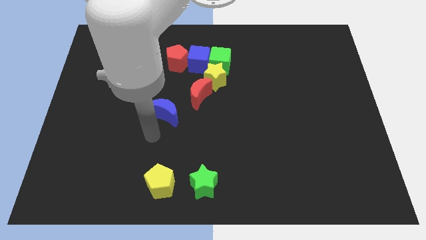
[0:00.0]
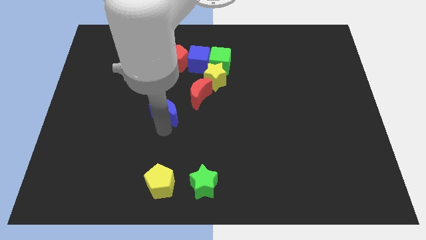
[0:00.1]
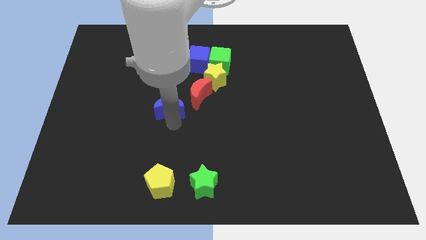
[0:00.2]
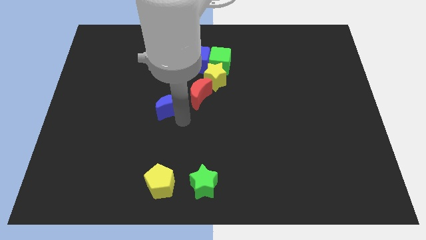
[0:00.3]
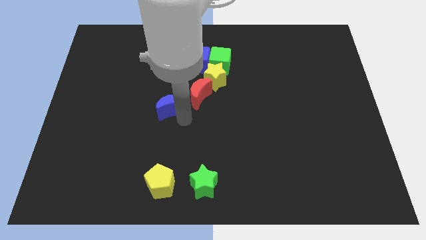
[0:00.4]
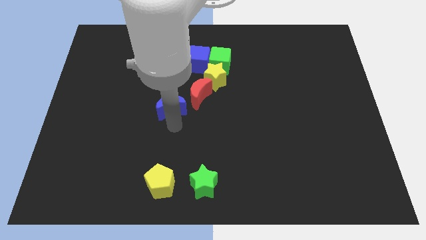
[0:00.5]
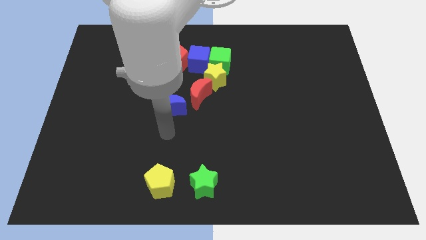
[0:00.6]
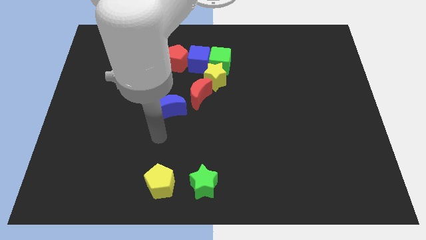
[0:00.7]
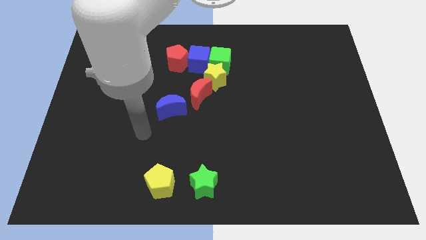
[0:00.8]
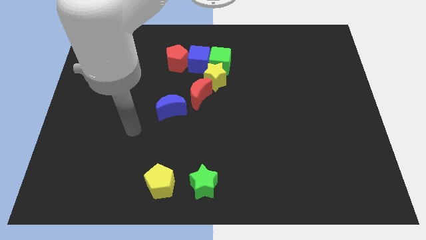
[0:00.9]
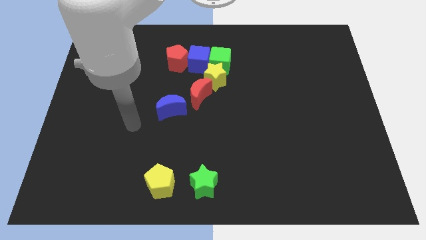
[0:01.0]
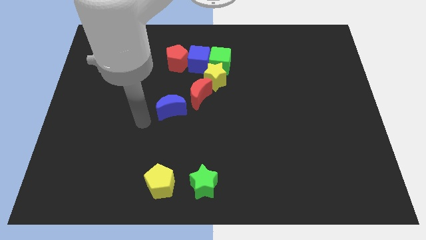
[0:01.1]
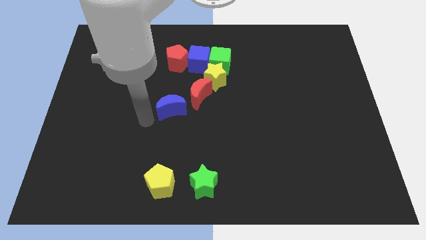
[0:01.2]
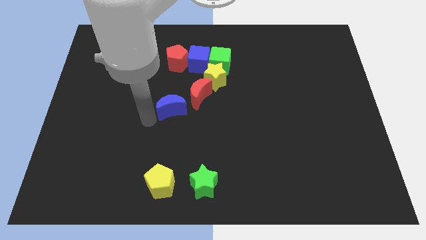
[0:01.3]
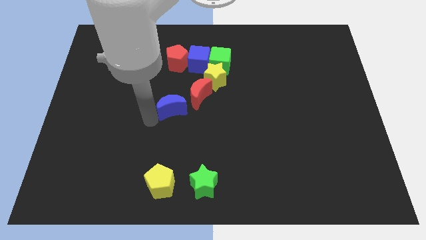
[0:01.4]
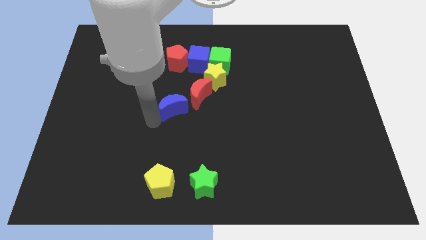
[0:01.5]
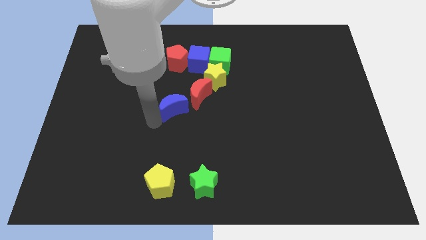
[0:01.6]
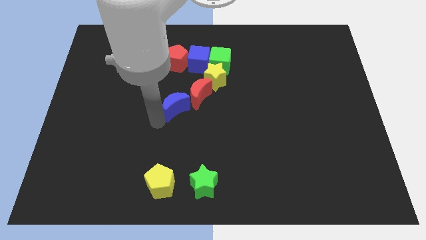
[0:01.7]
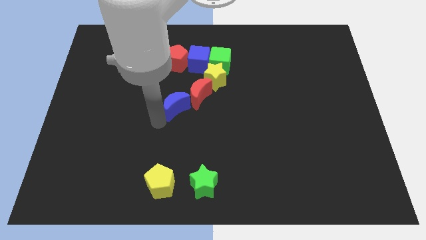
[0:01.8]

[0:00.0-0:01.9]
place the blue moon close to the red moon

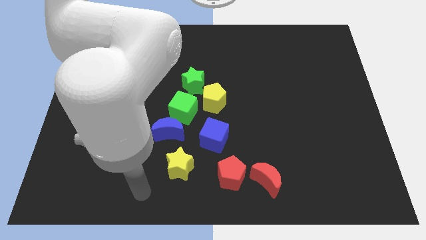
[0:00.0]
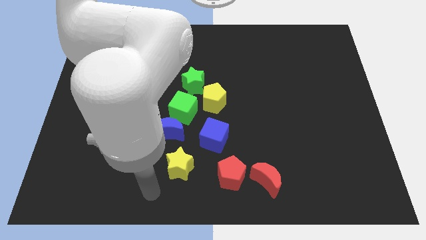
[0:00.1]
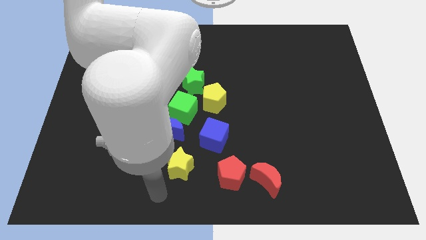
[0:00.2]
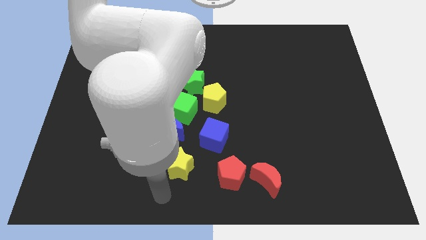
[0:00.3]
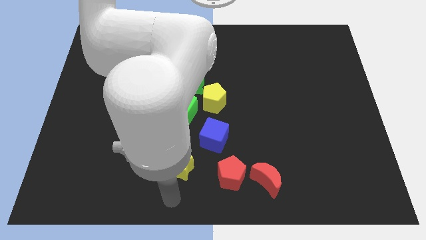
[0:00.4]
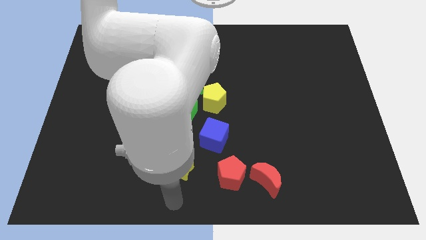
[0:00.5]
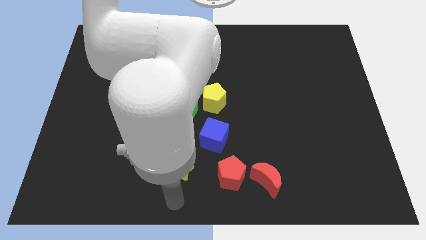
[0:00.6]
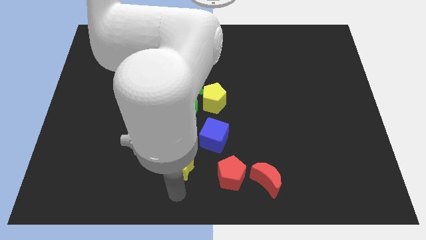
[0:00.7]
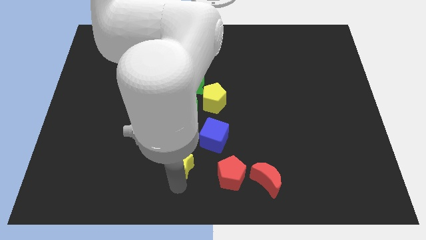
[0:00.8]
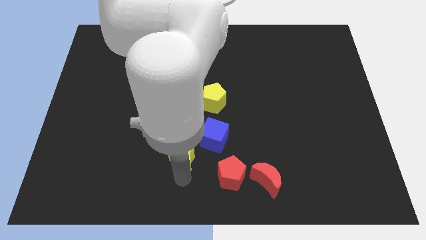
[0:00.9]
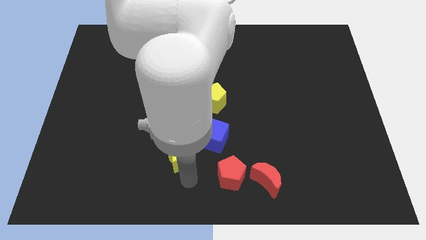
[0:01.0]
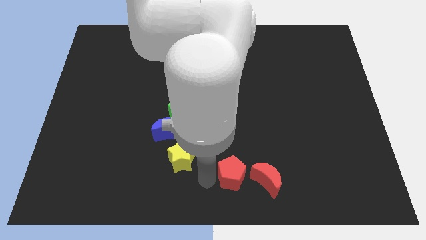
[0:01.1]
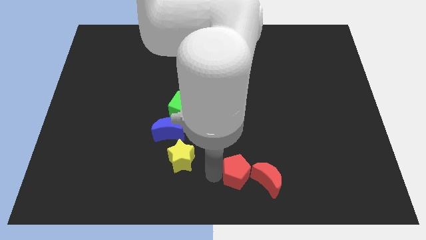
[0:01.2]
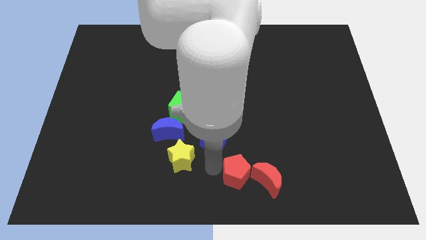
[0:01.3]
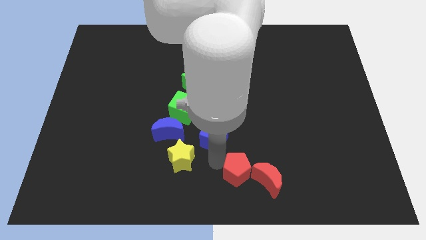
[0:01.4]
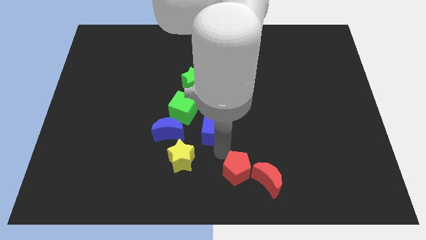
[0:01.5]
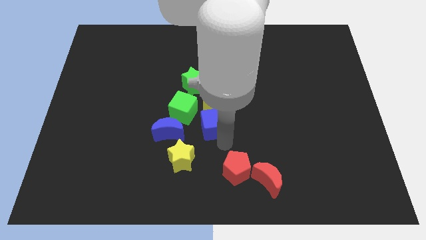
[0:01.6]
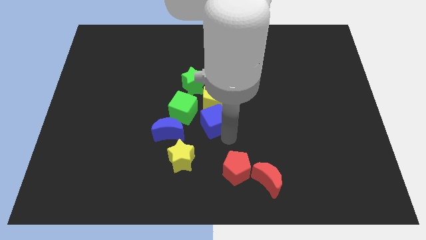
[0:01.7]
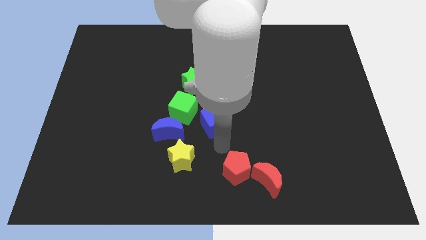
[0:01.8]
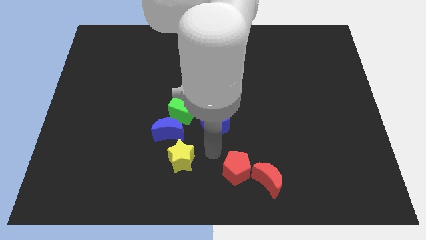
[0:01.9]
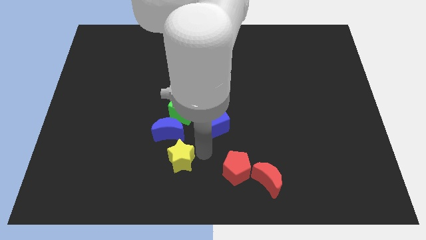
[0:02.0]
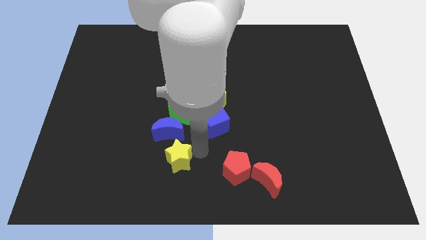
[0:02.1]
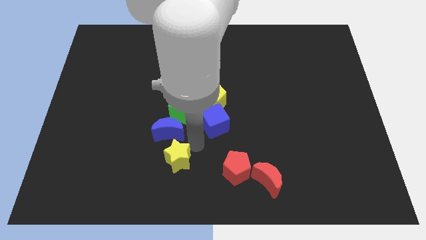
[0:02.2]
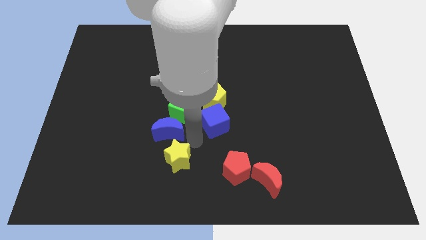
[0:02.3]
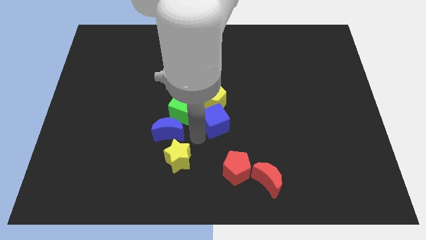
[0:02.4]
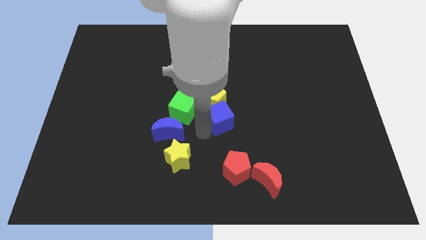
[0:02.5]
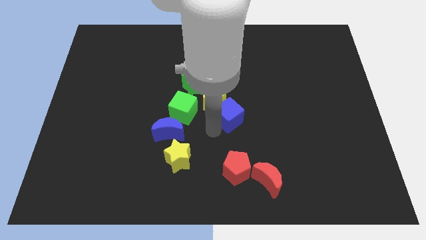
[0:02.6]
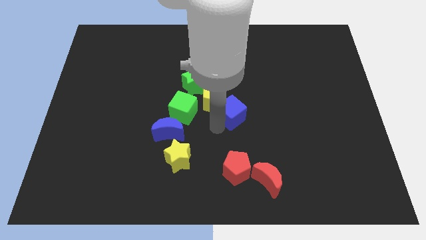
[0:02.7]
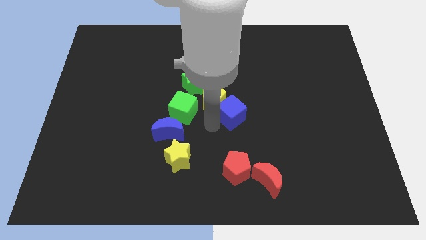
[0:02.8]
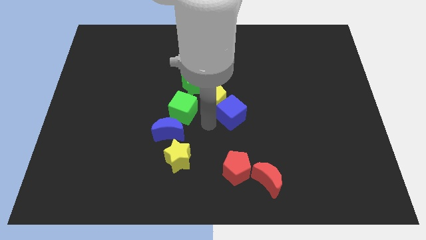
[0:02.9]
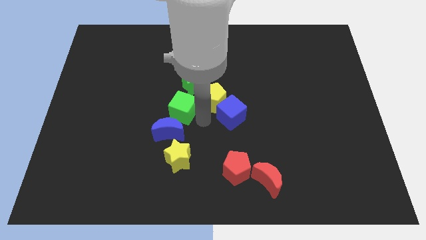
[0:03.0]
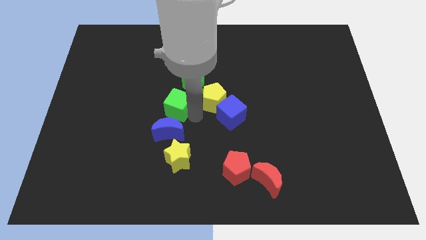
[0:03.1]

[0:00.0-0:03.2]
move the blue cube diagonally below the yellow pentagon

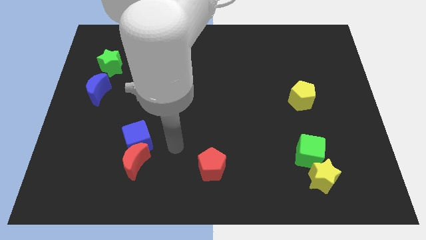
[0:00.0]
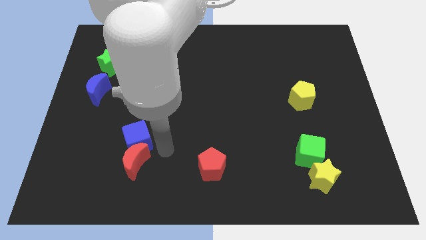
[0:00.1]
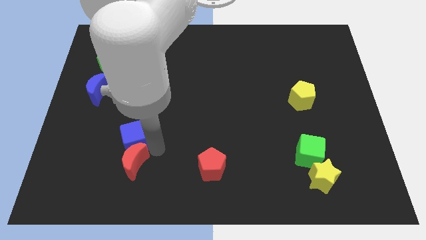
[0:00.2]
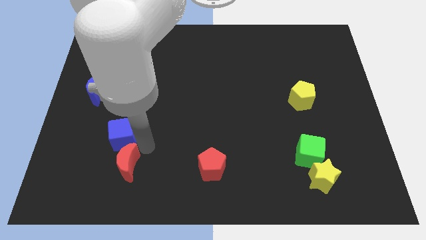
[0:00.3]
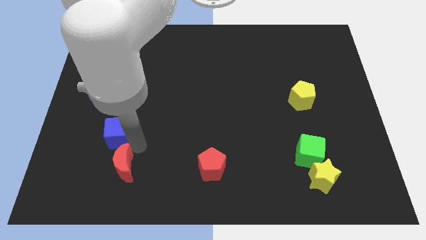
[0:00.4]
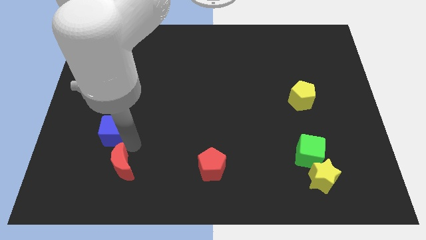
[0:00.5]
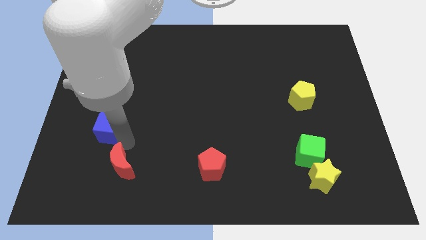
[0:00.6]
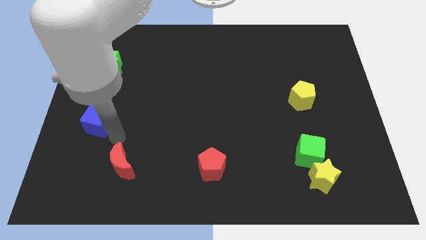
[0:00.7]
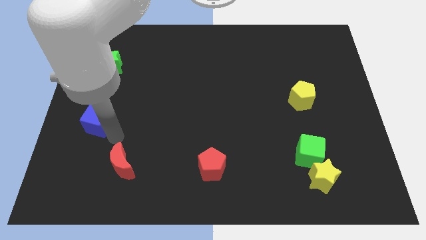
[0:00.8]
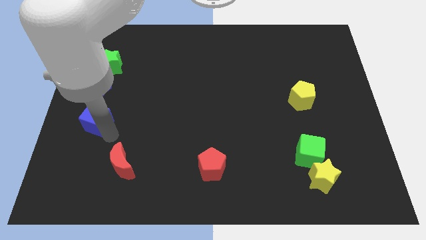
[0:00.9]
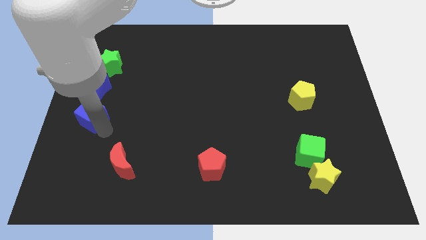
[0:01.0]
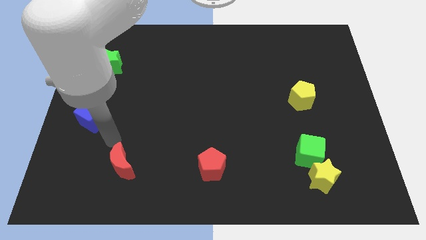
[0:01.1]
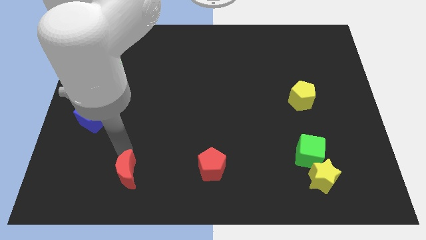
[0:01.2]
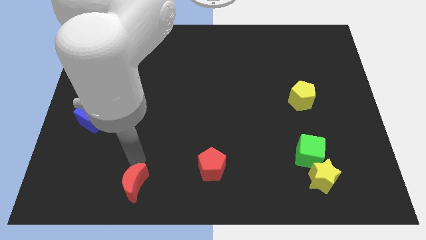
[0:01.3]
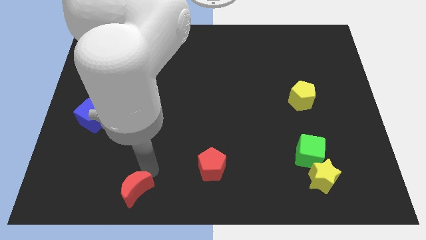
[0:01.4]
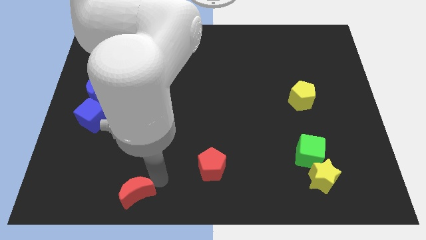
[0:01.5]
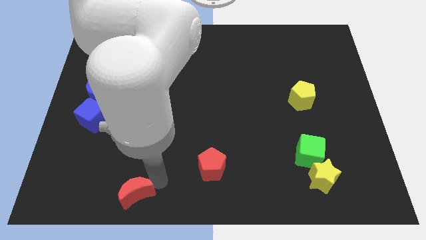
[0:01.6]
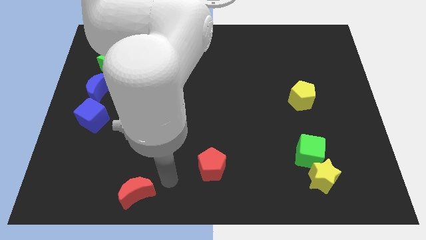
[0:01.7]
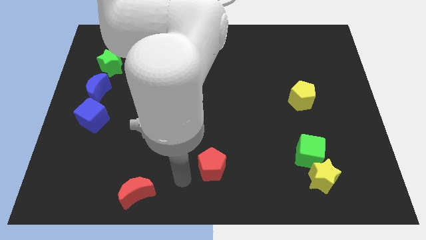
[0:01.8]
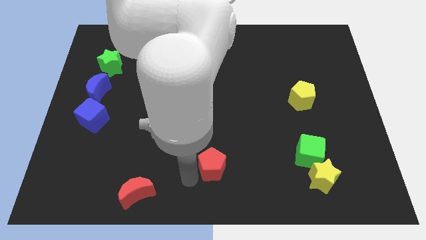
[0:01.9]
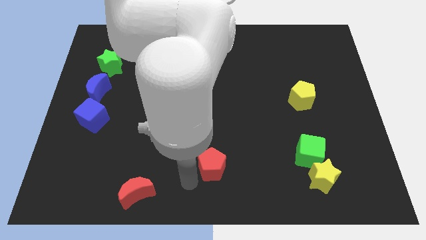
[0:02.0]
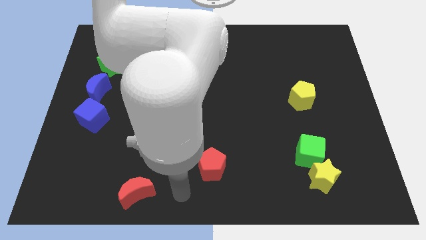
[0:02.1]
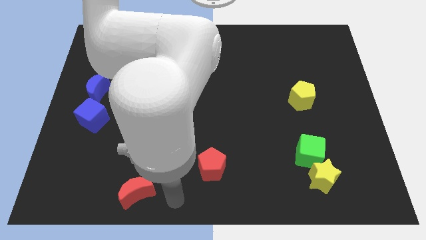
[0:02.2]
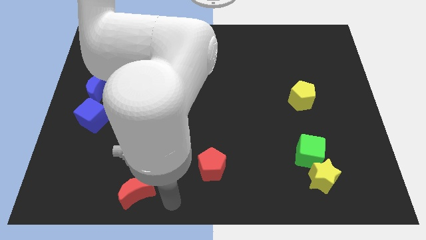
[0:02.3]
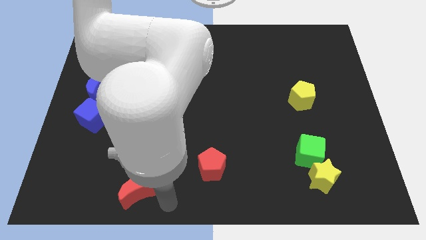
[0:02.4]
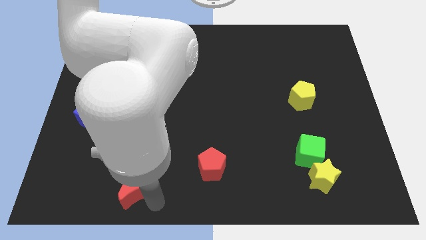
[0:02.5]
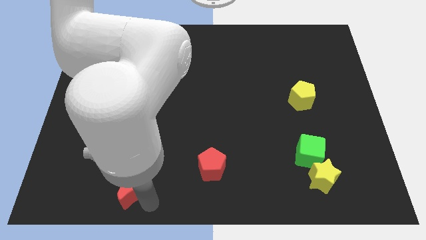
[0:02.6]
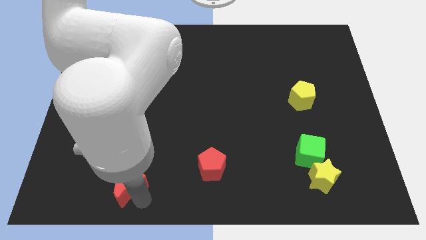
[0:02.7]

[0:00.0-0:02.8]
separate blue cube and red moon

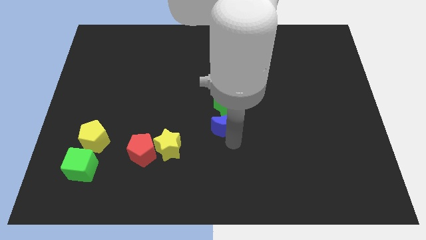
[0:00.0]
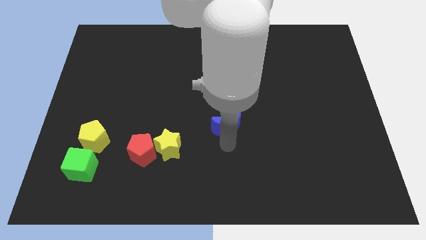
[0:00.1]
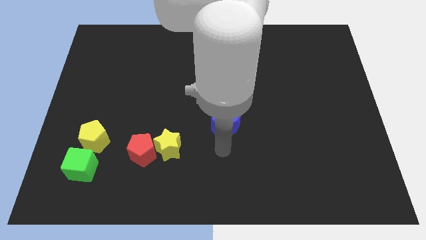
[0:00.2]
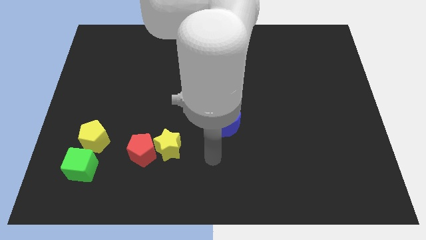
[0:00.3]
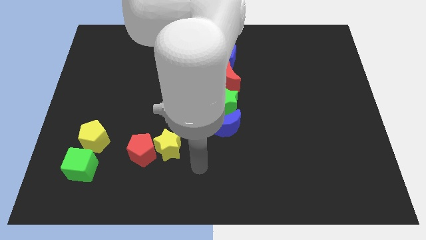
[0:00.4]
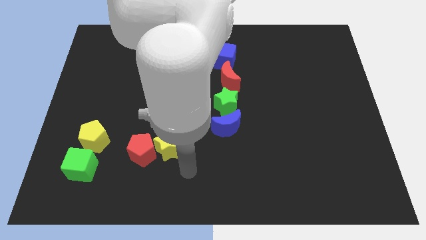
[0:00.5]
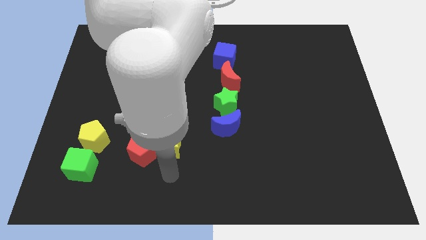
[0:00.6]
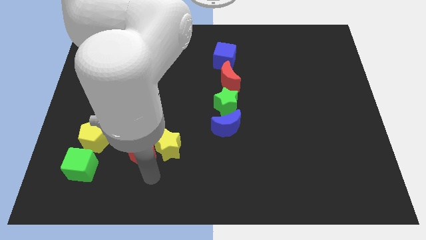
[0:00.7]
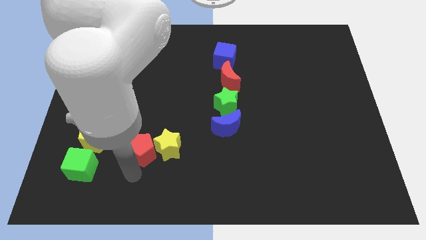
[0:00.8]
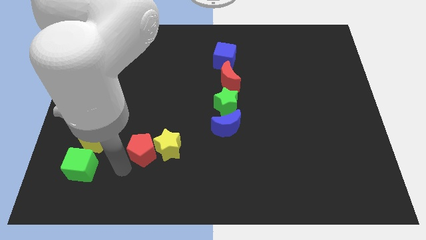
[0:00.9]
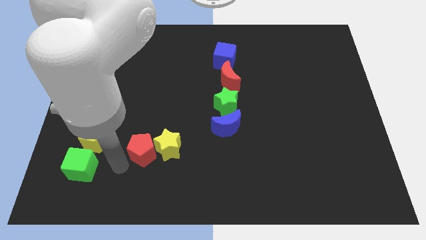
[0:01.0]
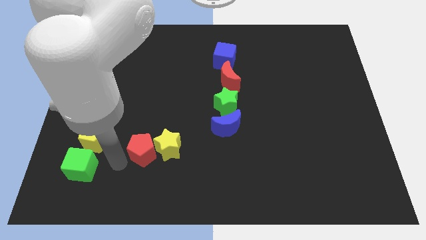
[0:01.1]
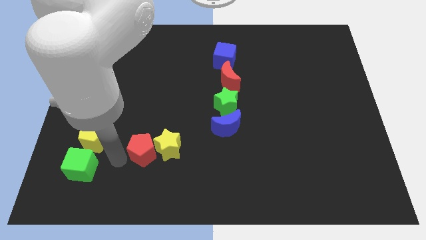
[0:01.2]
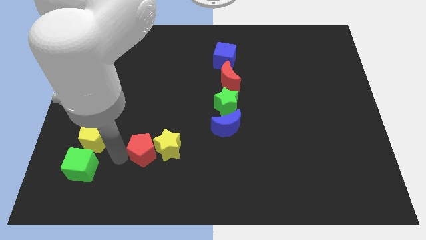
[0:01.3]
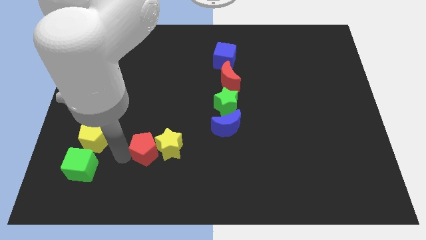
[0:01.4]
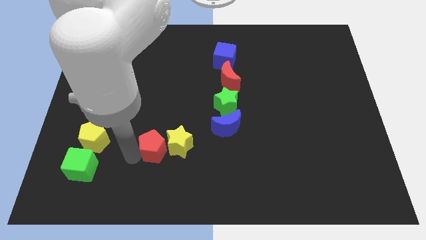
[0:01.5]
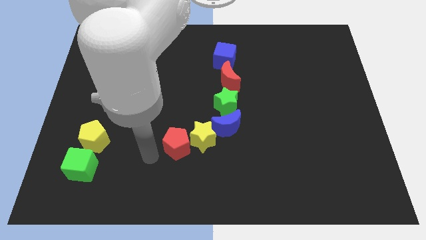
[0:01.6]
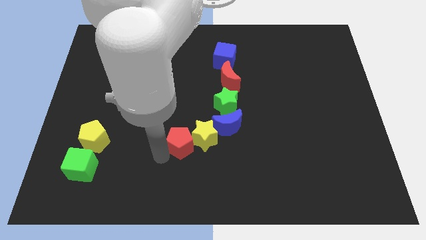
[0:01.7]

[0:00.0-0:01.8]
push the red pentagon and yellow star towards the blue crescent
